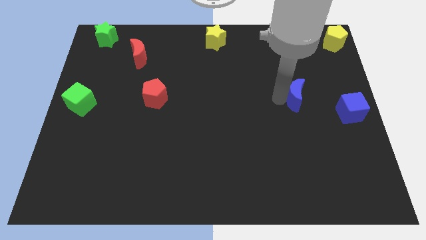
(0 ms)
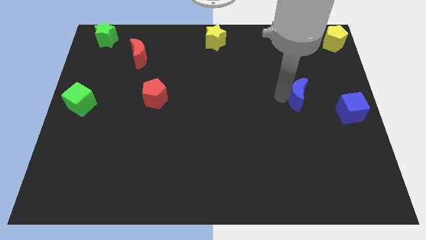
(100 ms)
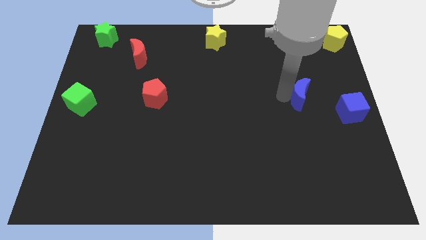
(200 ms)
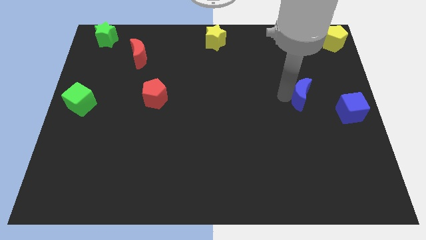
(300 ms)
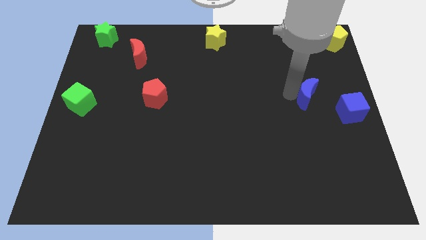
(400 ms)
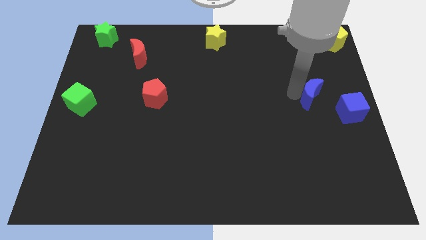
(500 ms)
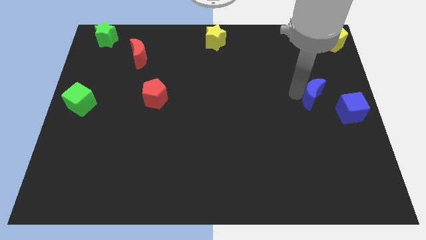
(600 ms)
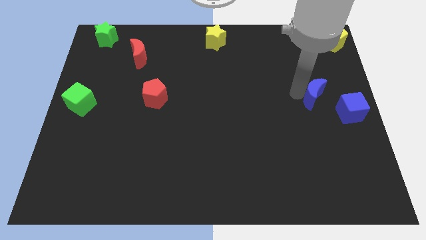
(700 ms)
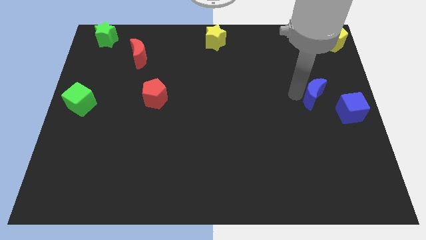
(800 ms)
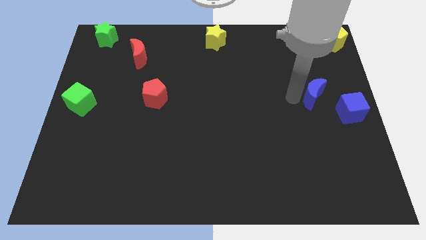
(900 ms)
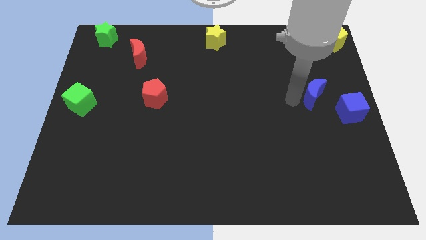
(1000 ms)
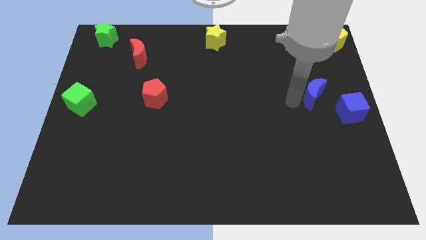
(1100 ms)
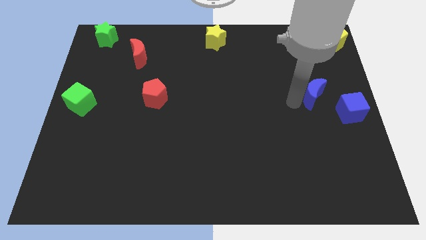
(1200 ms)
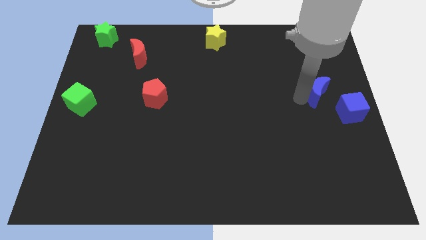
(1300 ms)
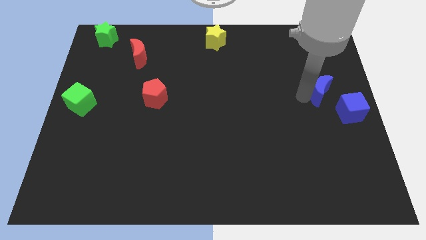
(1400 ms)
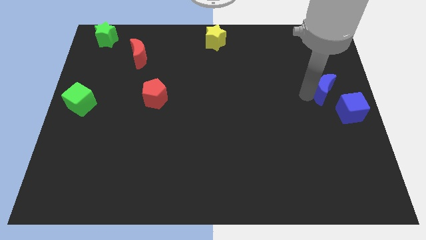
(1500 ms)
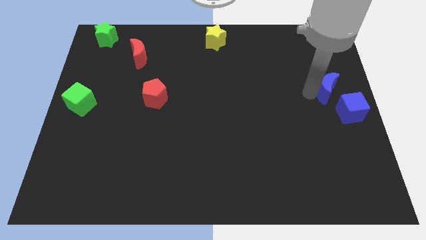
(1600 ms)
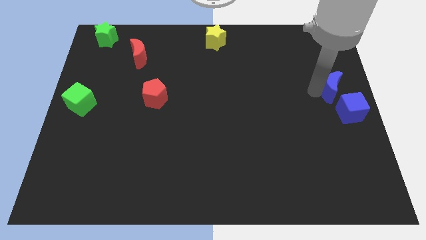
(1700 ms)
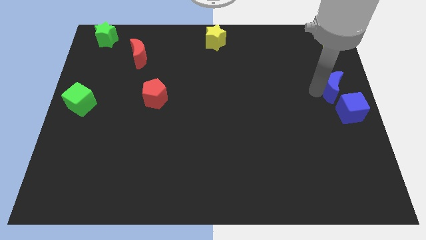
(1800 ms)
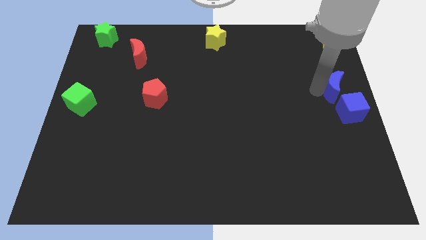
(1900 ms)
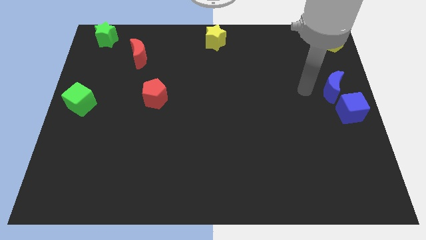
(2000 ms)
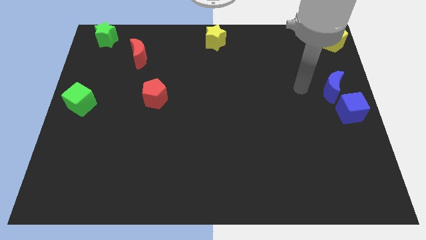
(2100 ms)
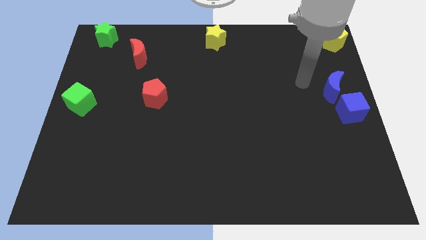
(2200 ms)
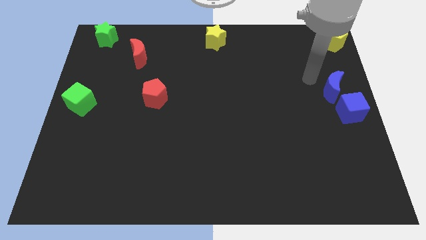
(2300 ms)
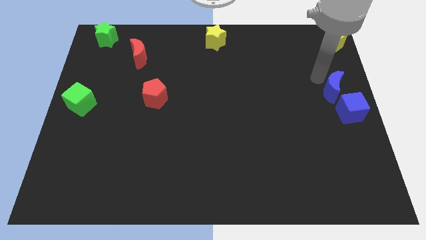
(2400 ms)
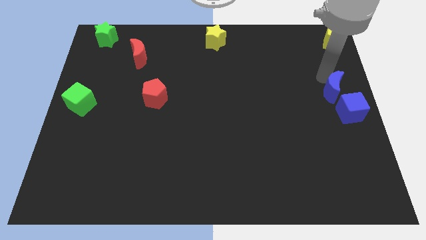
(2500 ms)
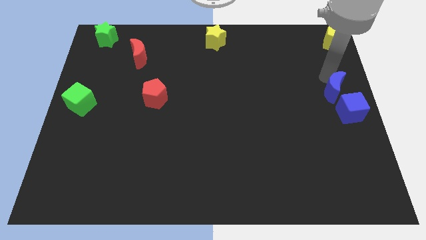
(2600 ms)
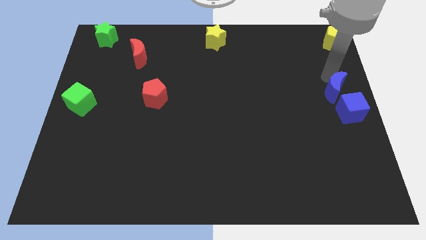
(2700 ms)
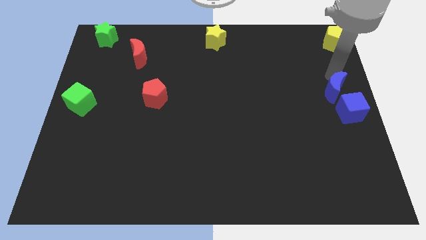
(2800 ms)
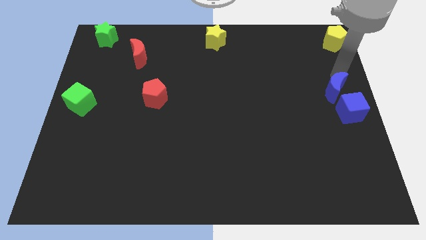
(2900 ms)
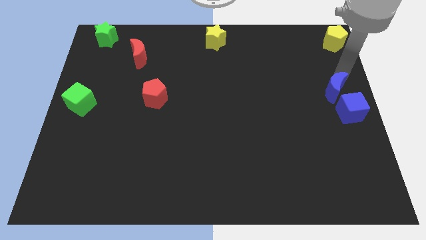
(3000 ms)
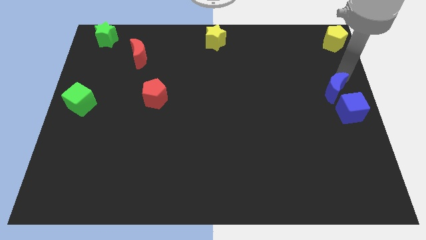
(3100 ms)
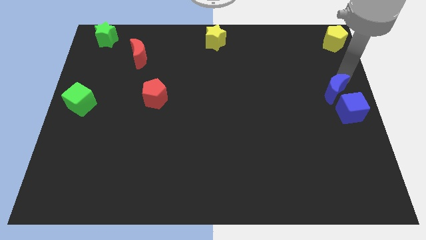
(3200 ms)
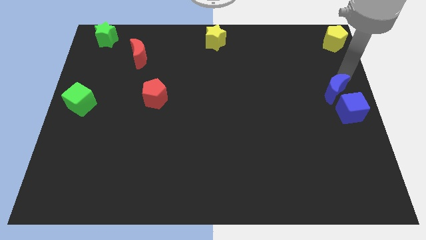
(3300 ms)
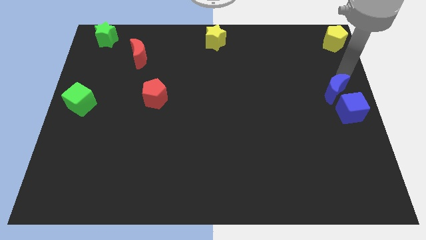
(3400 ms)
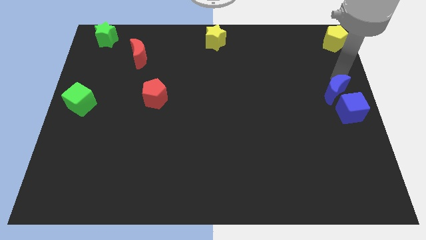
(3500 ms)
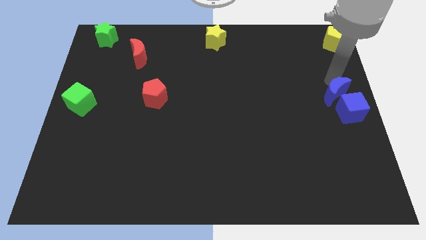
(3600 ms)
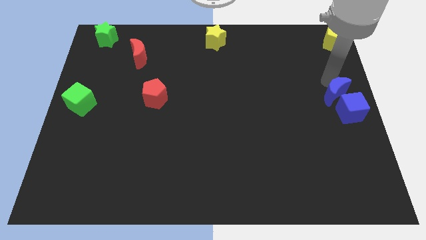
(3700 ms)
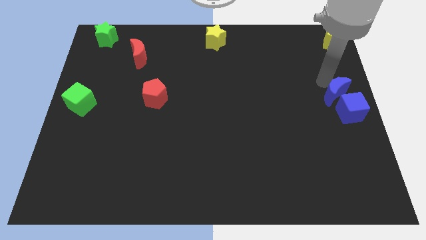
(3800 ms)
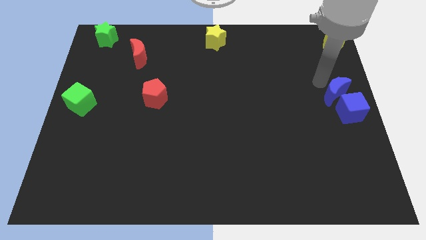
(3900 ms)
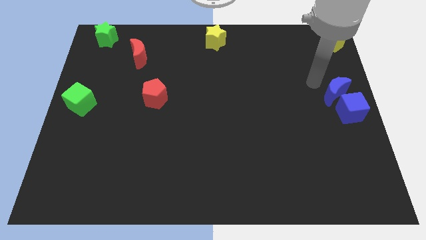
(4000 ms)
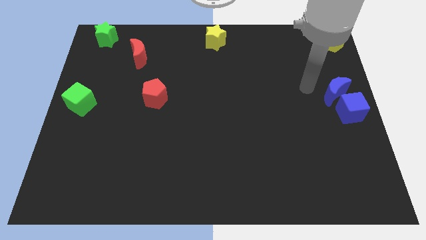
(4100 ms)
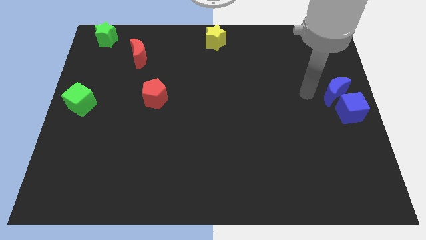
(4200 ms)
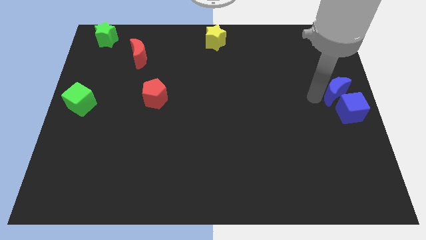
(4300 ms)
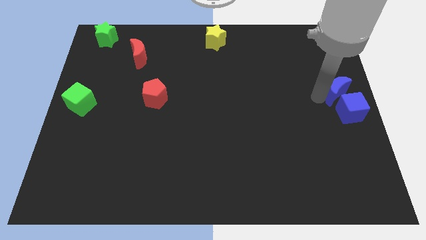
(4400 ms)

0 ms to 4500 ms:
push the blue crescent close to the blue cube

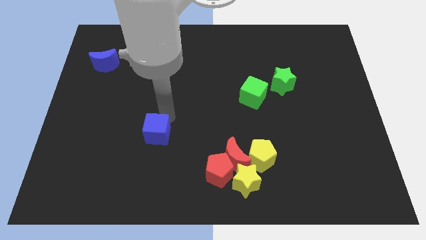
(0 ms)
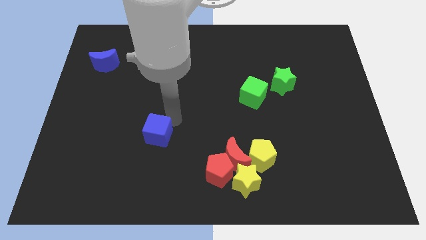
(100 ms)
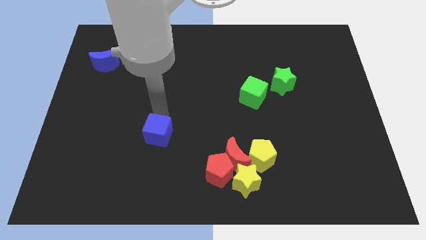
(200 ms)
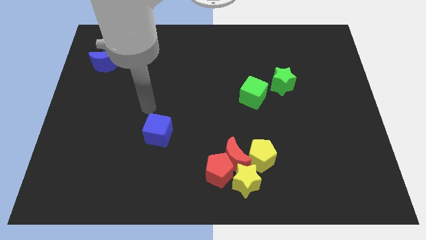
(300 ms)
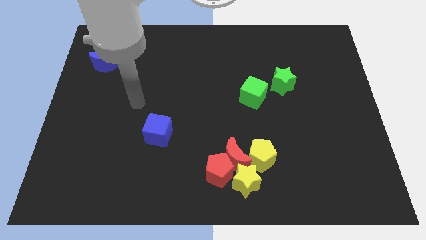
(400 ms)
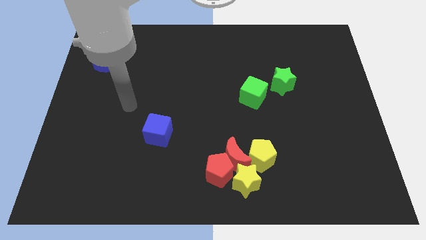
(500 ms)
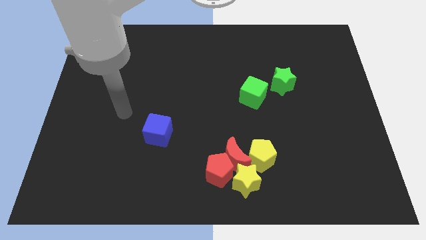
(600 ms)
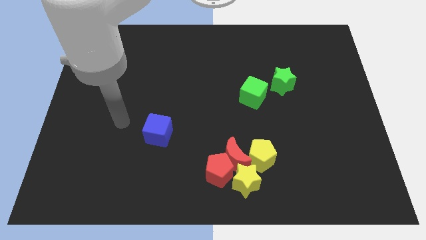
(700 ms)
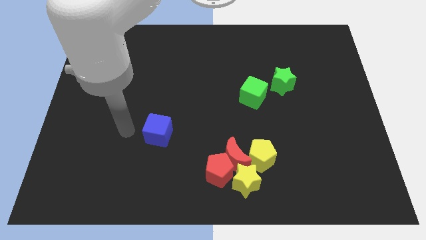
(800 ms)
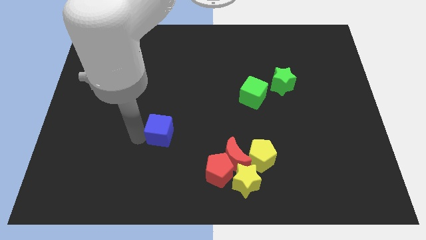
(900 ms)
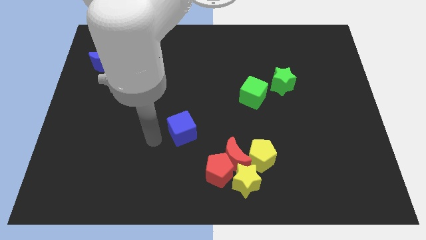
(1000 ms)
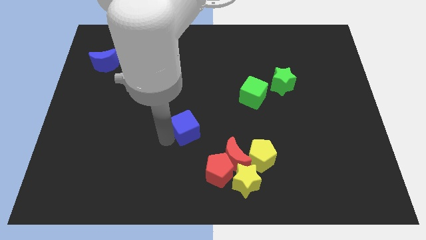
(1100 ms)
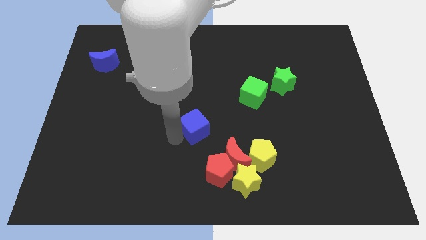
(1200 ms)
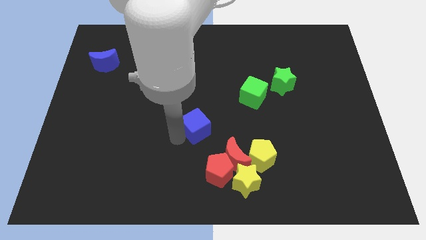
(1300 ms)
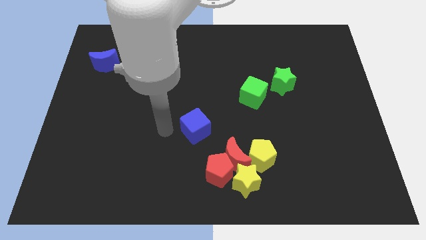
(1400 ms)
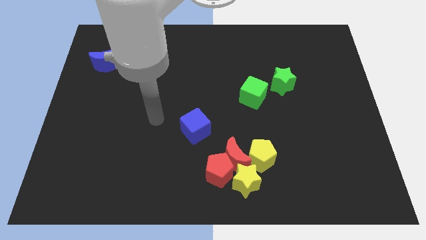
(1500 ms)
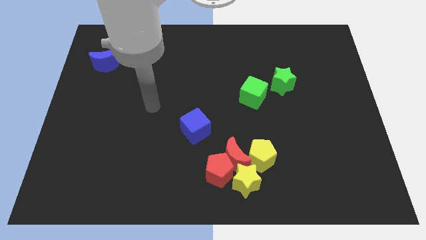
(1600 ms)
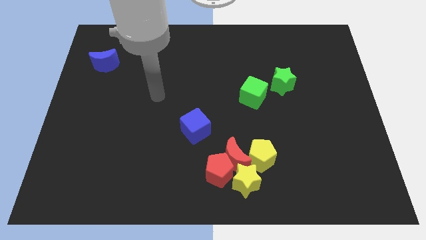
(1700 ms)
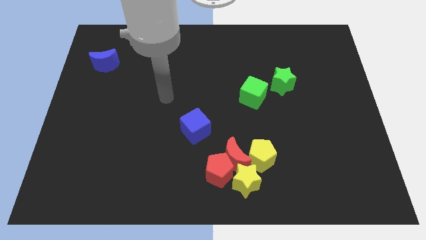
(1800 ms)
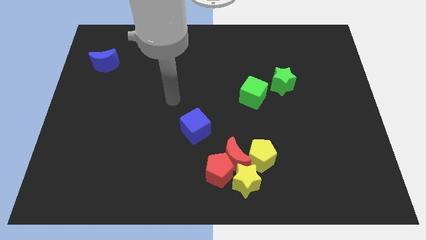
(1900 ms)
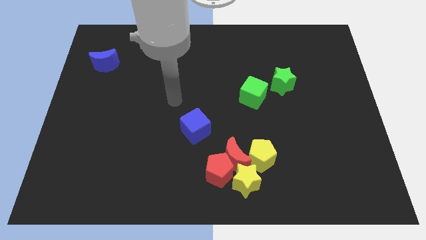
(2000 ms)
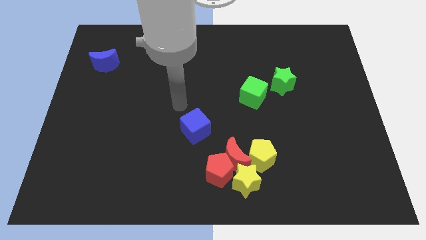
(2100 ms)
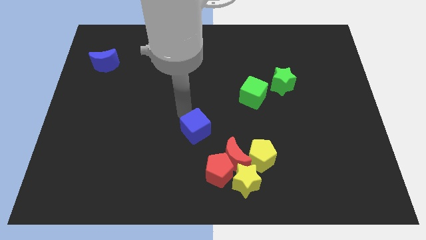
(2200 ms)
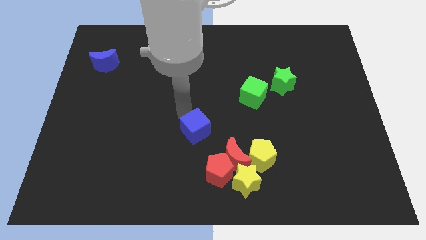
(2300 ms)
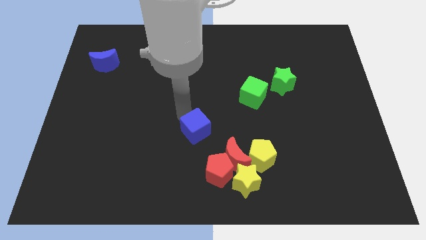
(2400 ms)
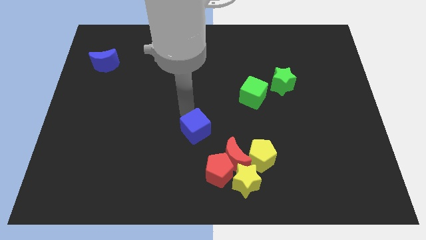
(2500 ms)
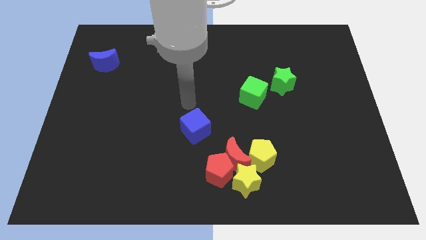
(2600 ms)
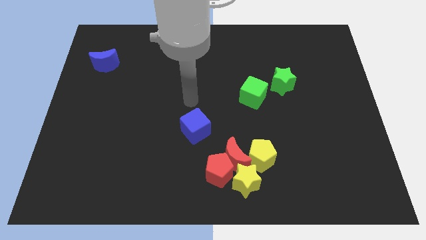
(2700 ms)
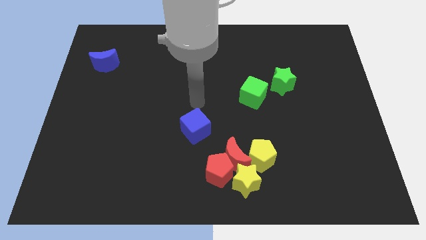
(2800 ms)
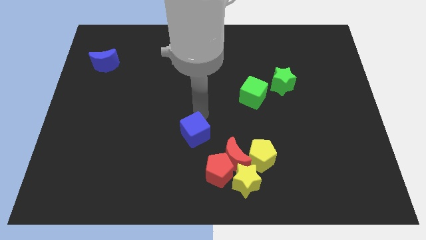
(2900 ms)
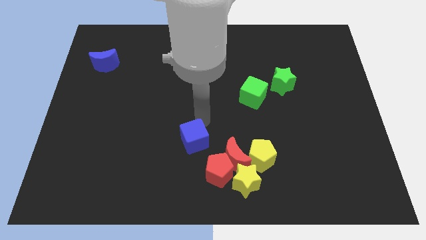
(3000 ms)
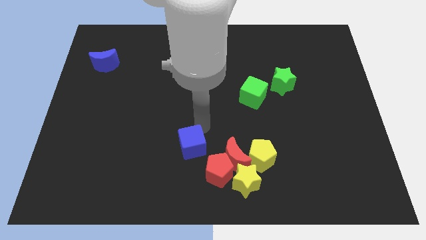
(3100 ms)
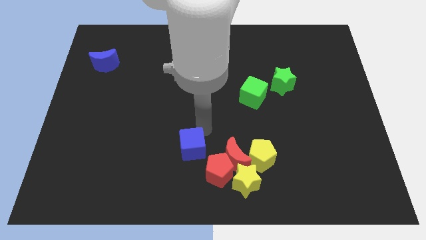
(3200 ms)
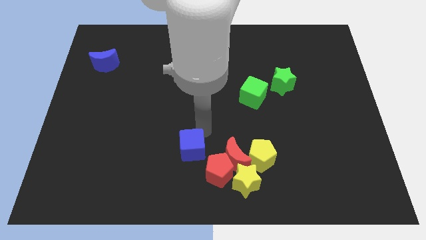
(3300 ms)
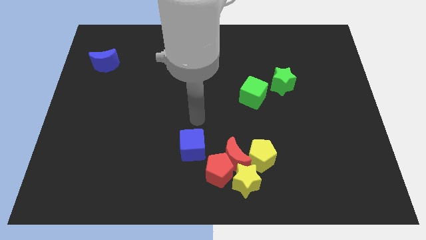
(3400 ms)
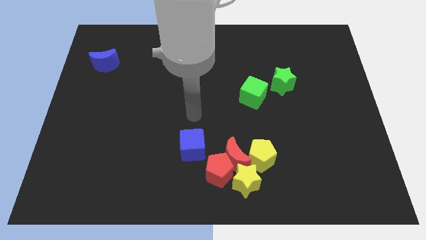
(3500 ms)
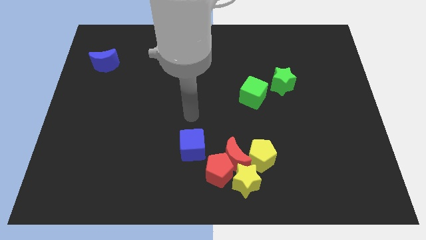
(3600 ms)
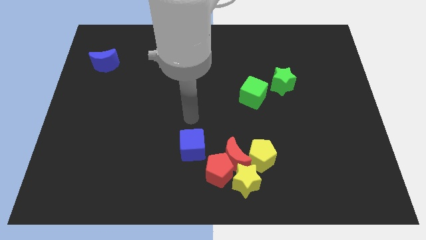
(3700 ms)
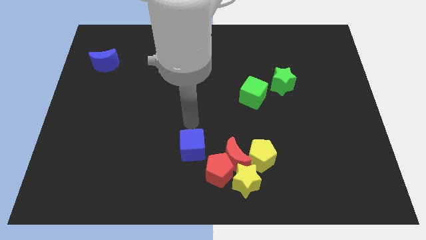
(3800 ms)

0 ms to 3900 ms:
move the blue cube left above the red pentagon

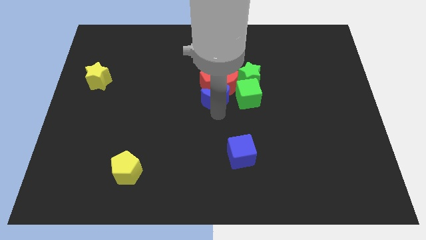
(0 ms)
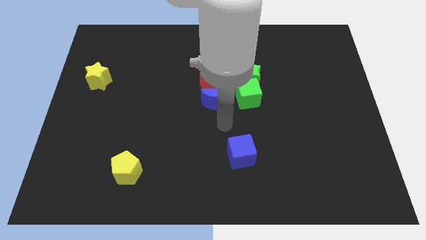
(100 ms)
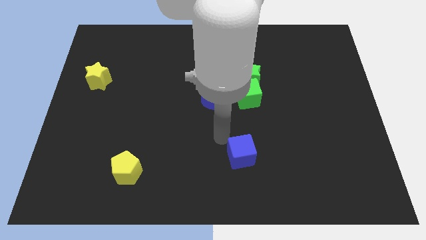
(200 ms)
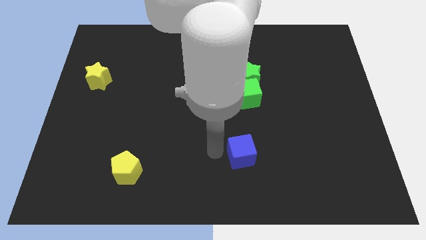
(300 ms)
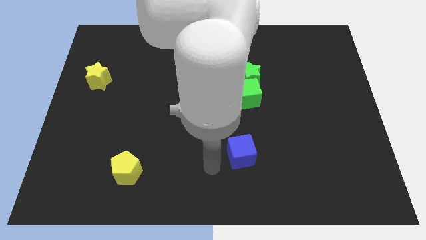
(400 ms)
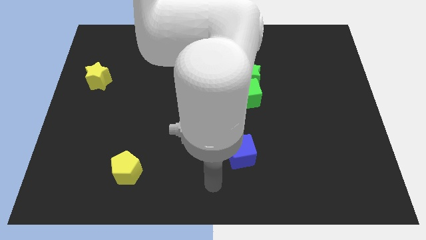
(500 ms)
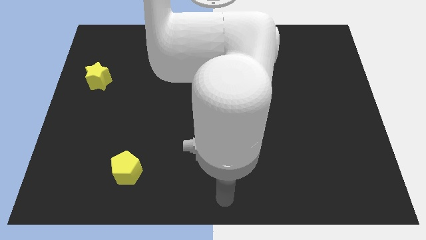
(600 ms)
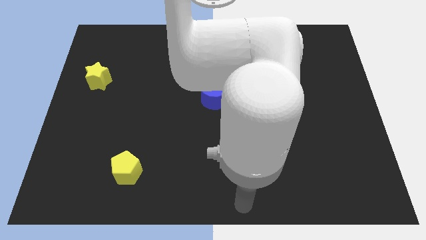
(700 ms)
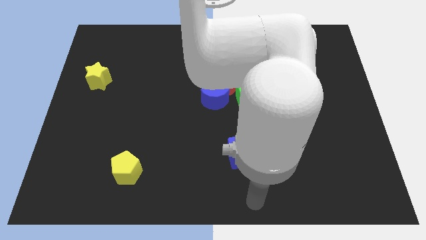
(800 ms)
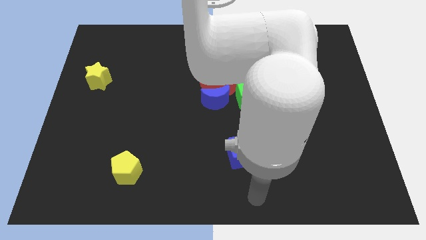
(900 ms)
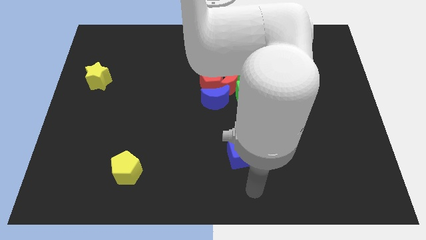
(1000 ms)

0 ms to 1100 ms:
drag your arm to the bottom center
